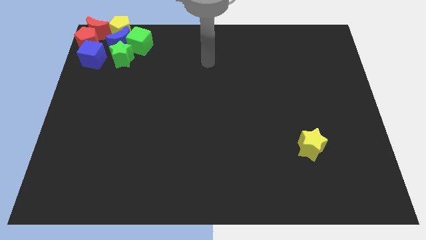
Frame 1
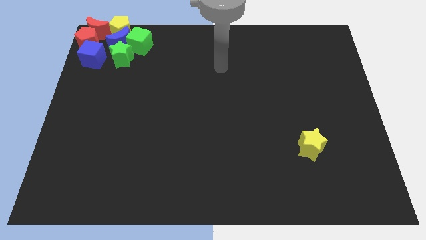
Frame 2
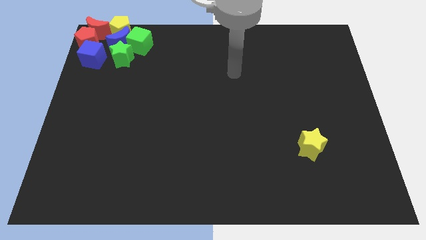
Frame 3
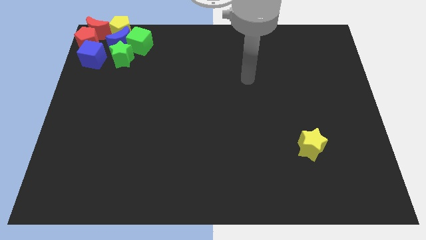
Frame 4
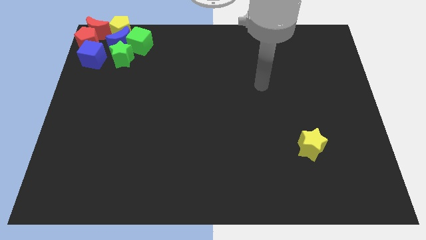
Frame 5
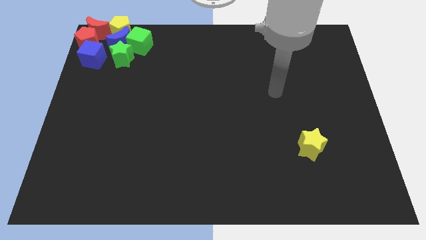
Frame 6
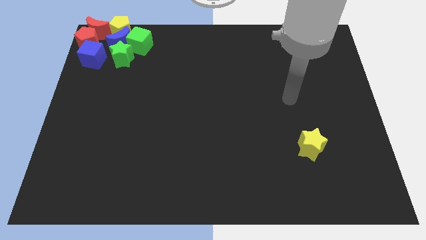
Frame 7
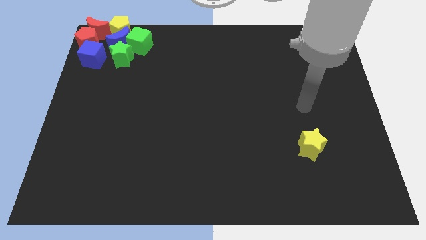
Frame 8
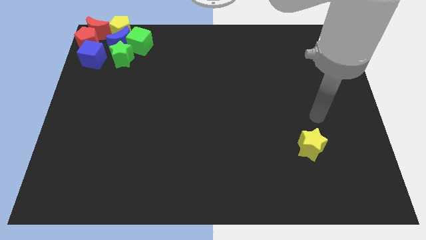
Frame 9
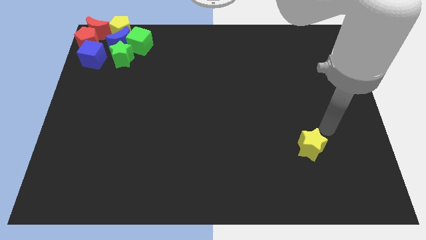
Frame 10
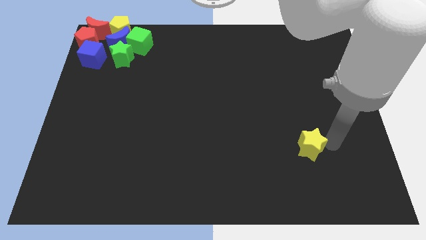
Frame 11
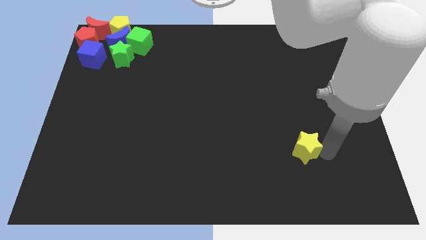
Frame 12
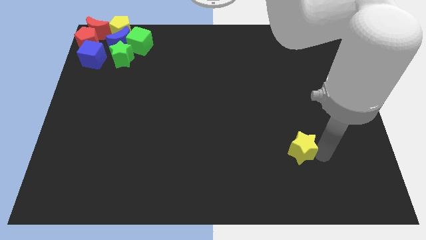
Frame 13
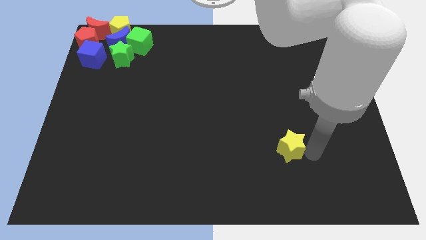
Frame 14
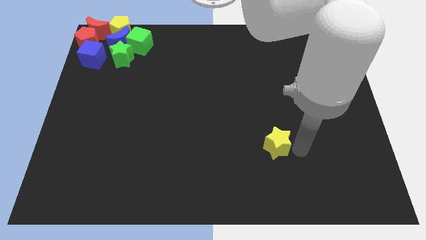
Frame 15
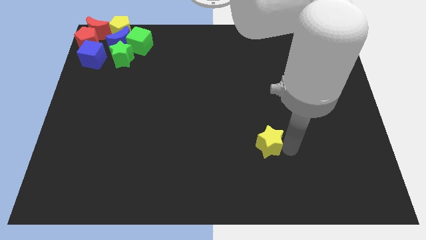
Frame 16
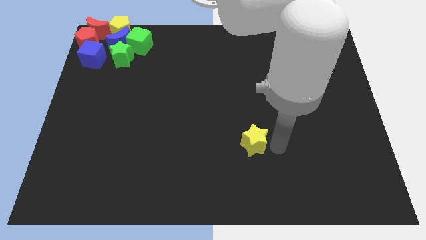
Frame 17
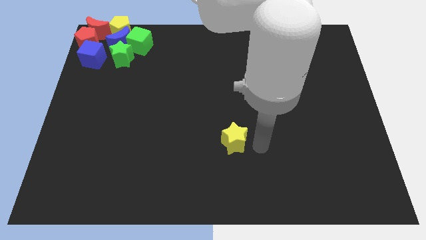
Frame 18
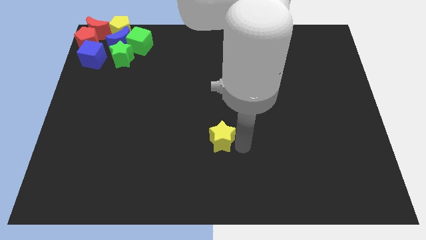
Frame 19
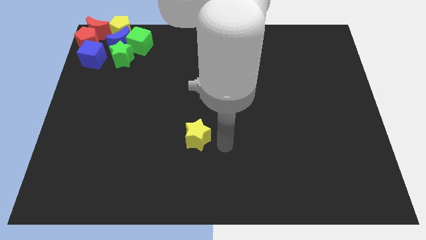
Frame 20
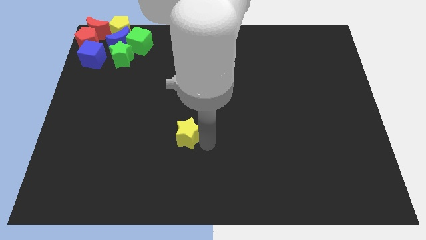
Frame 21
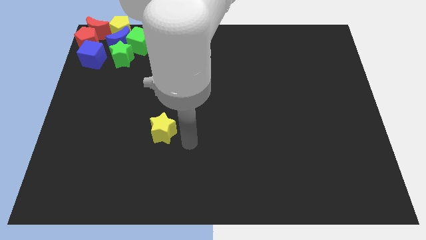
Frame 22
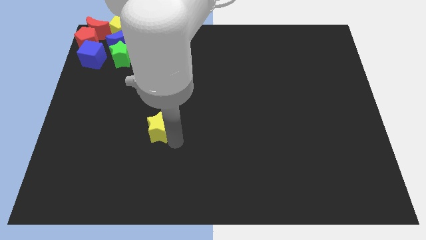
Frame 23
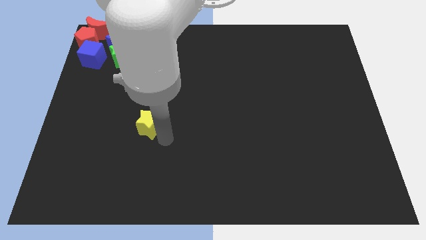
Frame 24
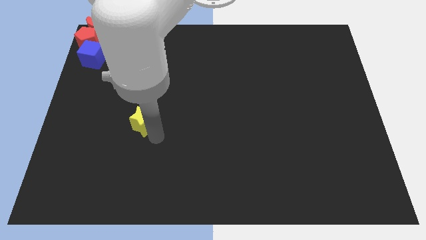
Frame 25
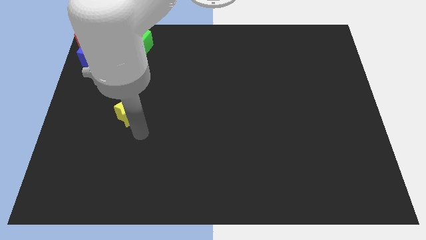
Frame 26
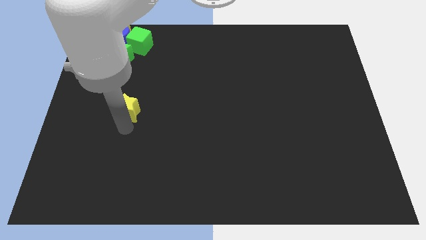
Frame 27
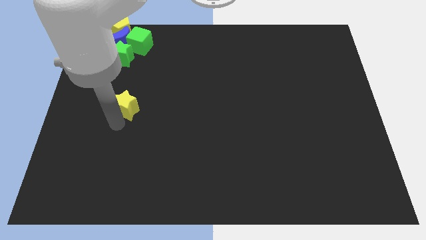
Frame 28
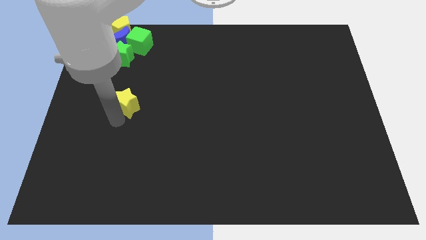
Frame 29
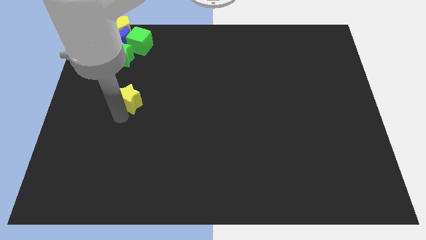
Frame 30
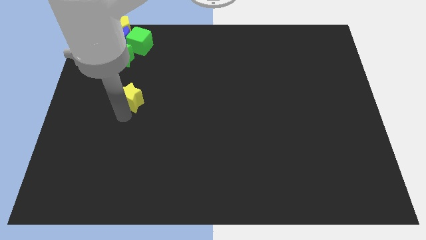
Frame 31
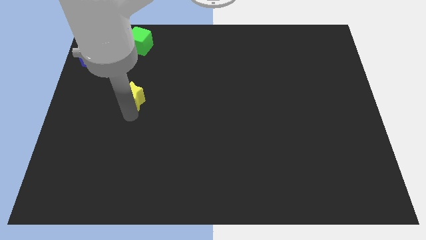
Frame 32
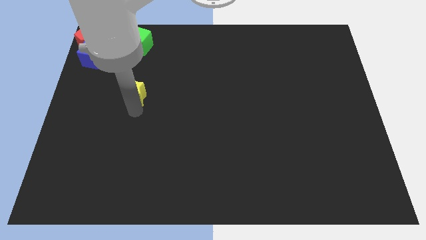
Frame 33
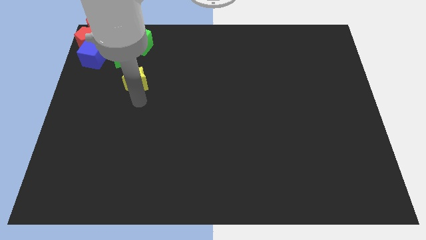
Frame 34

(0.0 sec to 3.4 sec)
drag the yellow star towards the green star

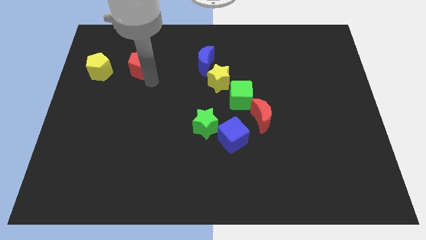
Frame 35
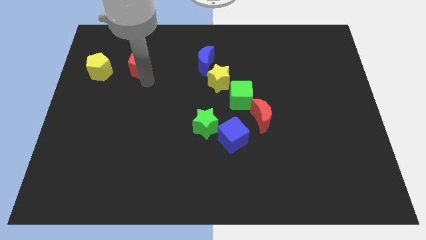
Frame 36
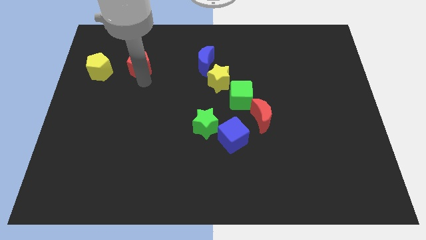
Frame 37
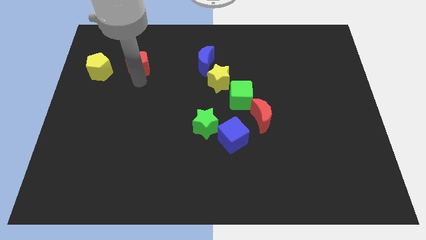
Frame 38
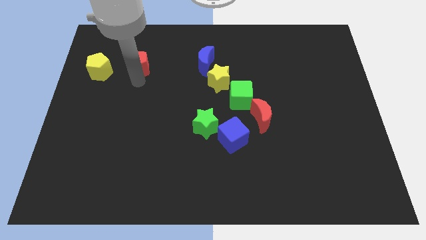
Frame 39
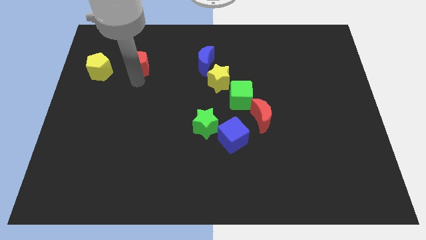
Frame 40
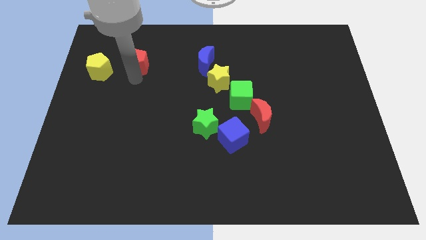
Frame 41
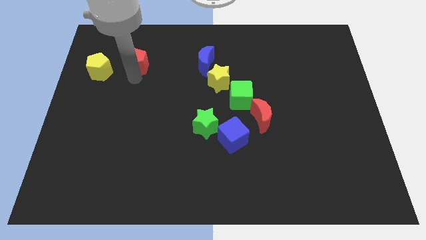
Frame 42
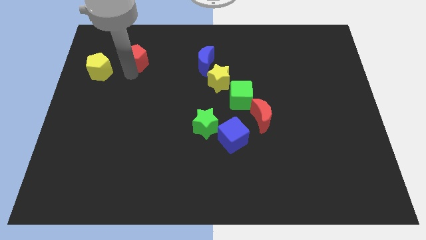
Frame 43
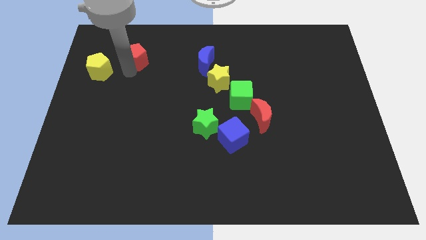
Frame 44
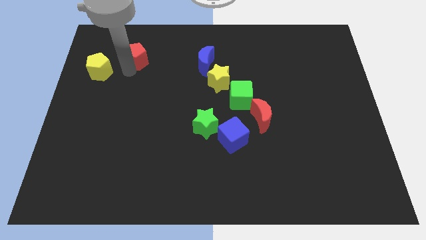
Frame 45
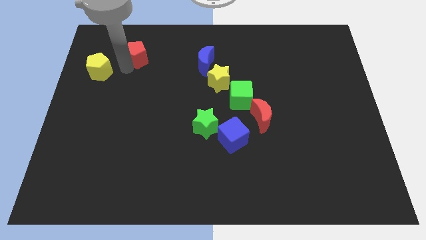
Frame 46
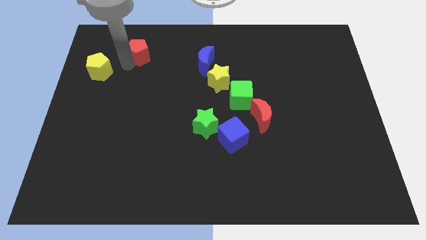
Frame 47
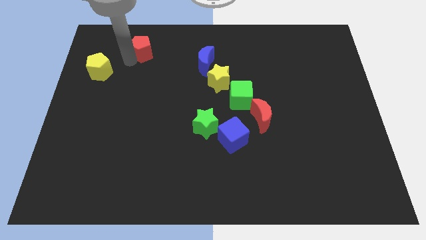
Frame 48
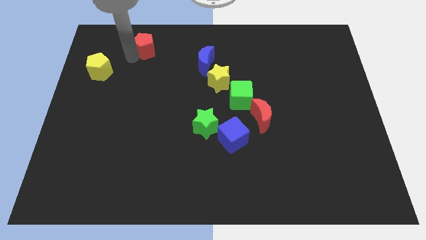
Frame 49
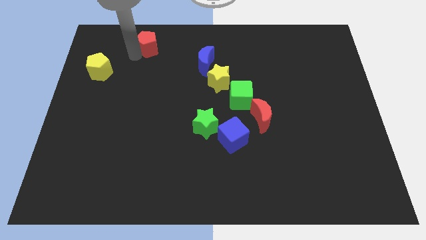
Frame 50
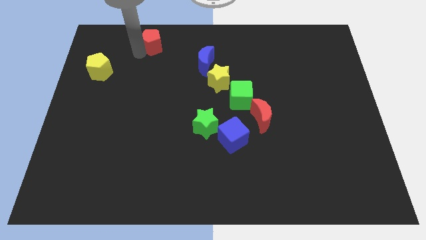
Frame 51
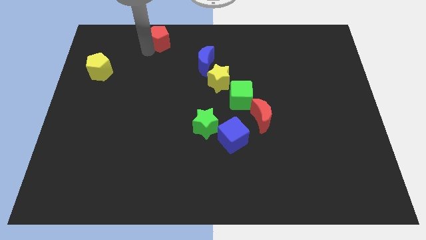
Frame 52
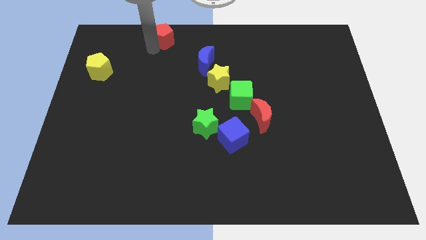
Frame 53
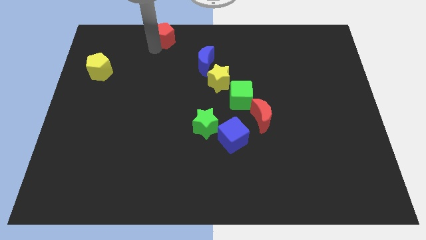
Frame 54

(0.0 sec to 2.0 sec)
put the red pentagon diagonal to the yellow pentagon

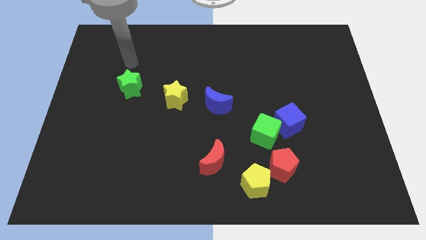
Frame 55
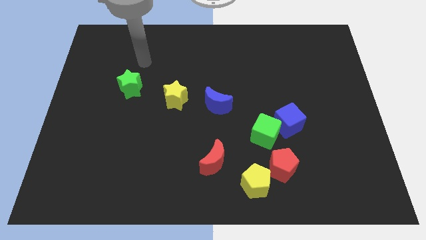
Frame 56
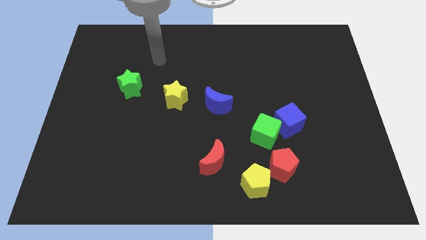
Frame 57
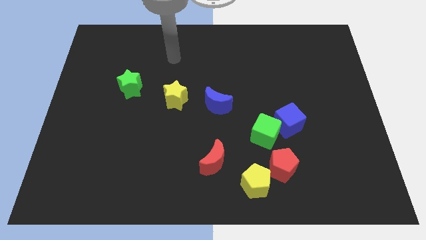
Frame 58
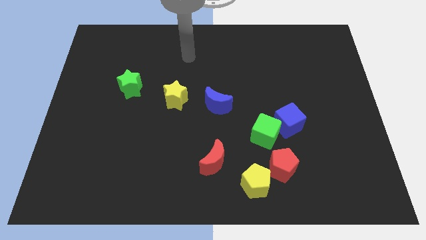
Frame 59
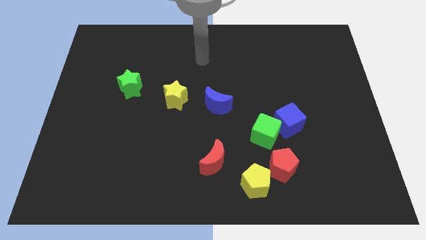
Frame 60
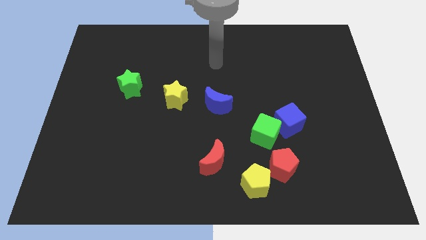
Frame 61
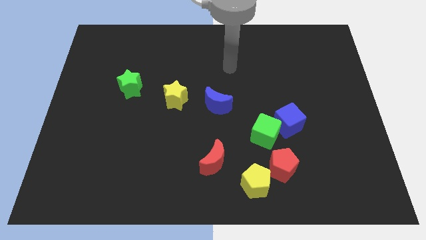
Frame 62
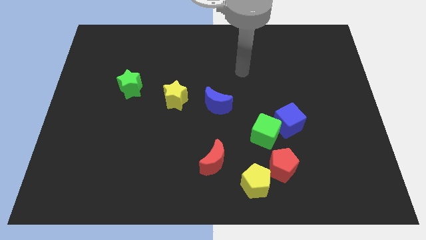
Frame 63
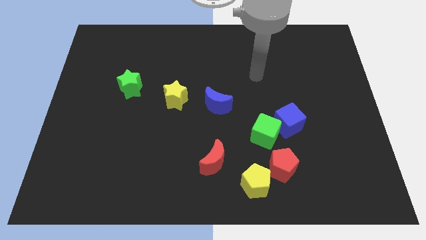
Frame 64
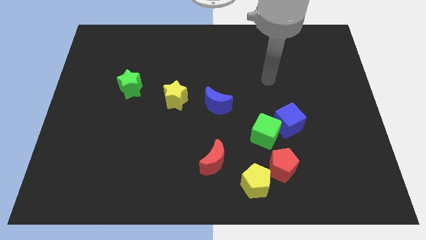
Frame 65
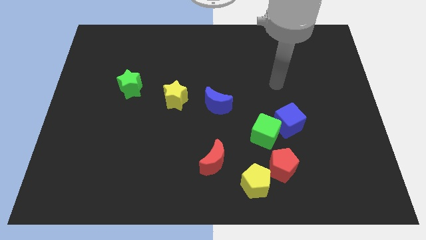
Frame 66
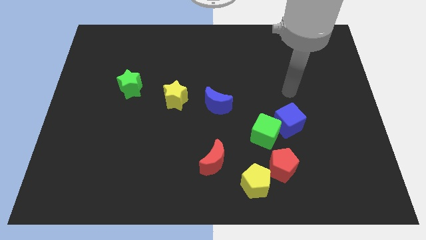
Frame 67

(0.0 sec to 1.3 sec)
point your arm at the top side of the group of blocks

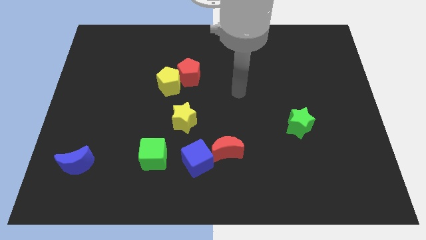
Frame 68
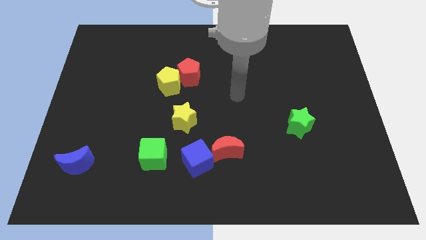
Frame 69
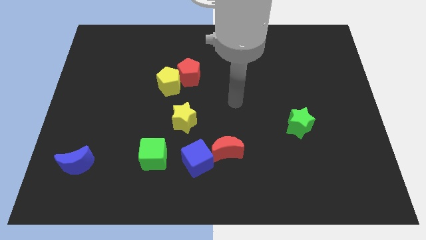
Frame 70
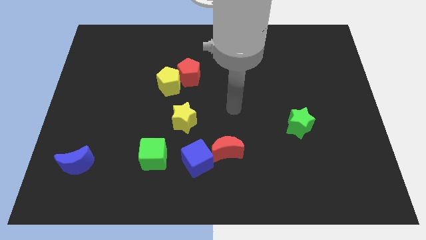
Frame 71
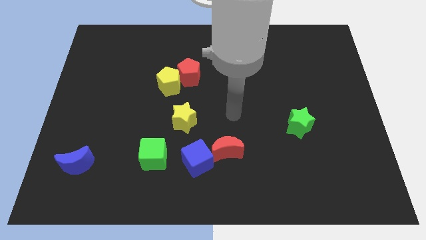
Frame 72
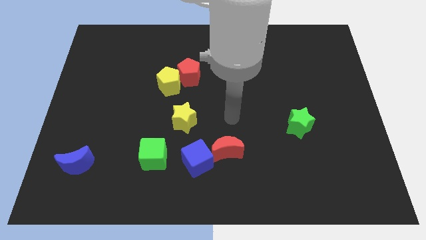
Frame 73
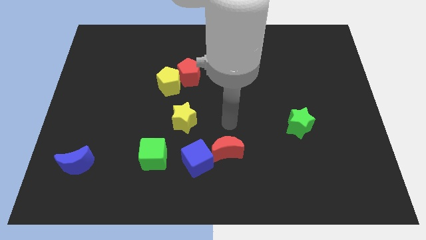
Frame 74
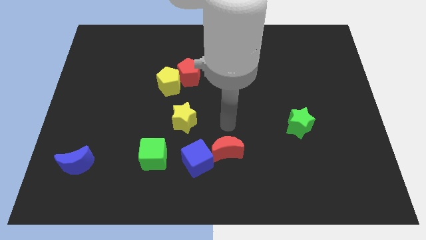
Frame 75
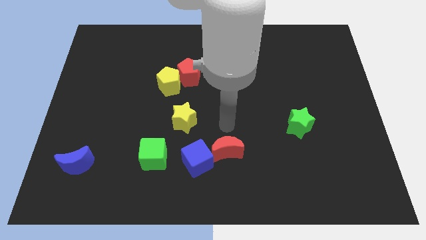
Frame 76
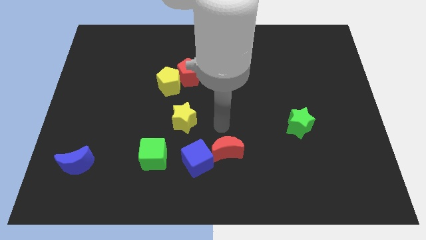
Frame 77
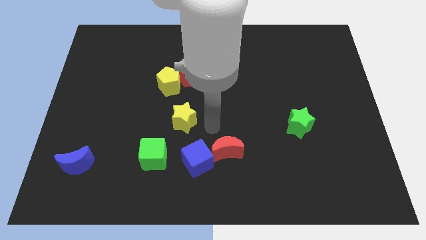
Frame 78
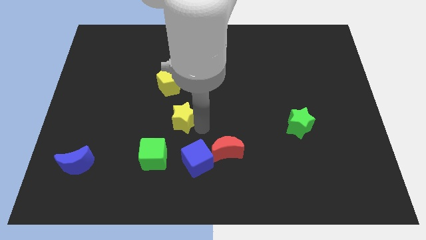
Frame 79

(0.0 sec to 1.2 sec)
place your arm above the blue cube

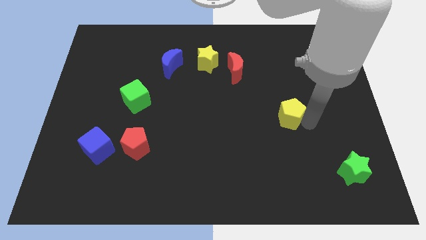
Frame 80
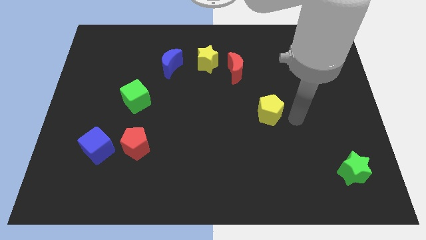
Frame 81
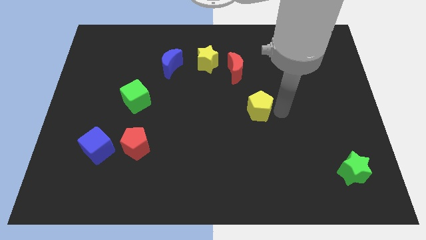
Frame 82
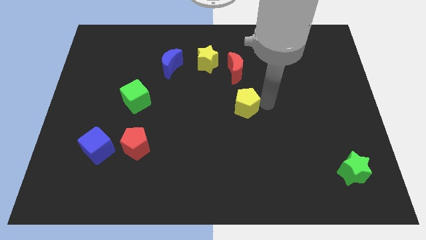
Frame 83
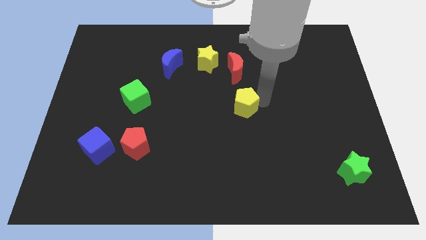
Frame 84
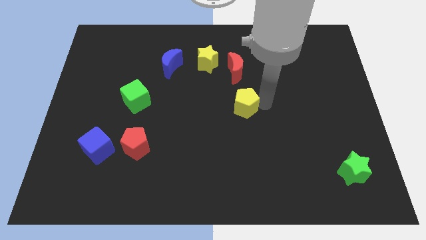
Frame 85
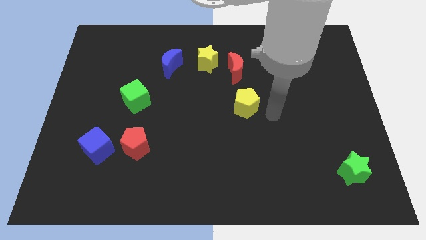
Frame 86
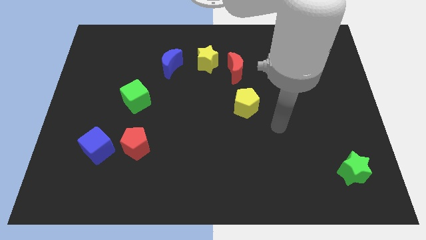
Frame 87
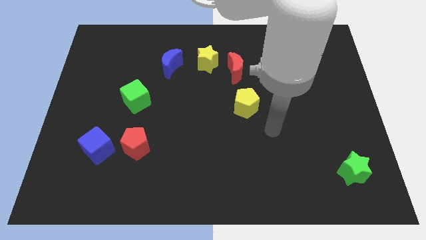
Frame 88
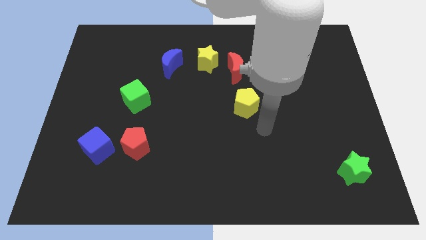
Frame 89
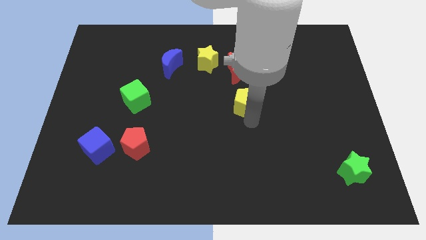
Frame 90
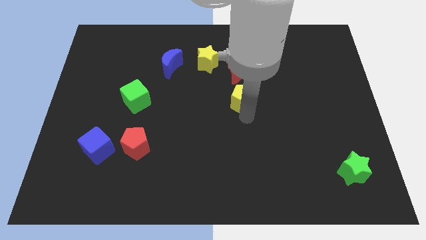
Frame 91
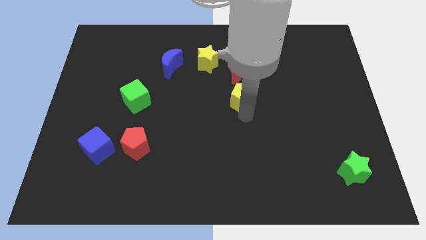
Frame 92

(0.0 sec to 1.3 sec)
put the yellow pentagon below the red moon
